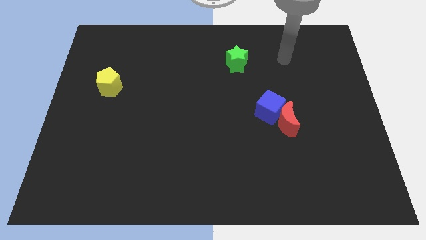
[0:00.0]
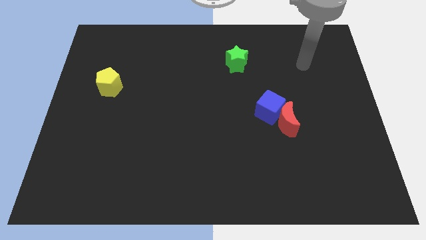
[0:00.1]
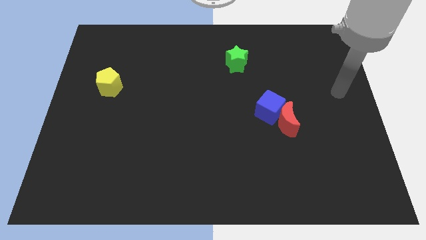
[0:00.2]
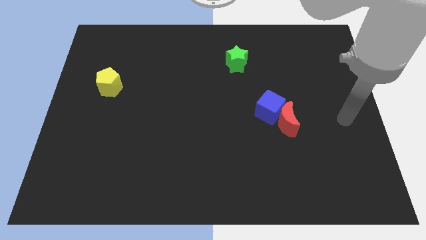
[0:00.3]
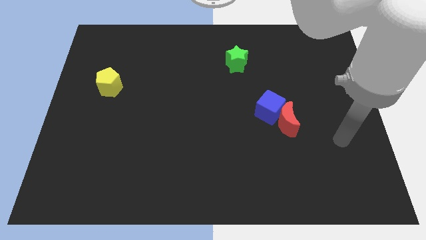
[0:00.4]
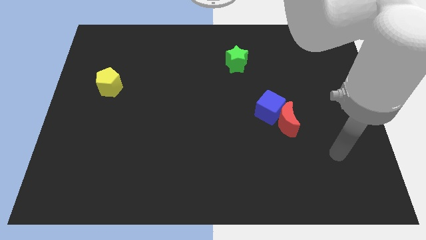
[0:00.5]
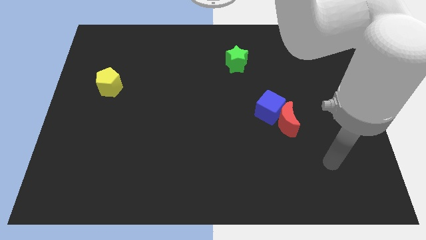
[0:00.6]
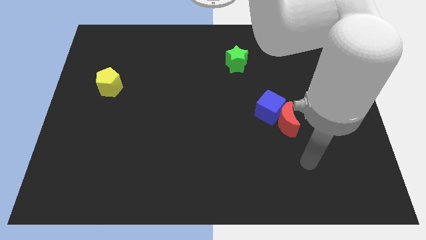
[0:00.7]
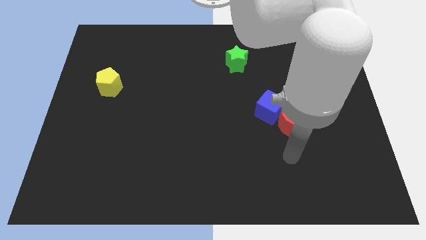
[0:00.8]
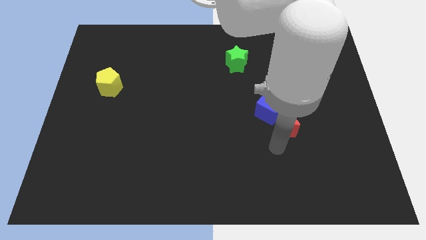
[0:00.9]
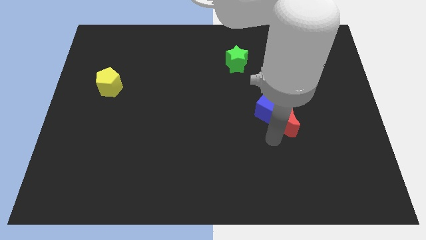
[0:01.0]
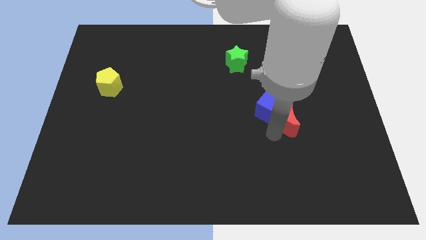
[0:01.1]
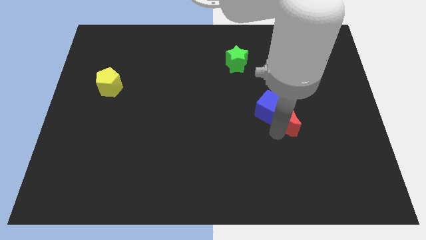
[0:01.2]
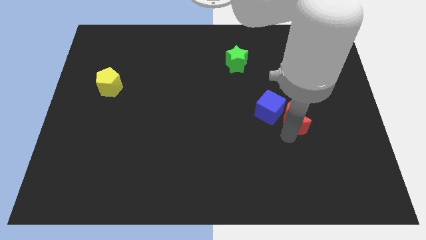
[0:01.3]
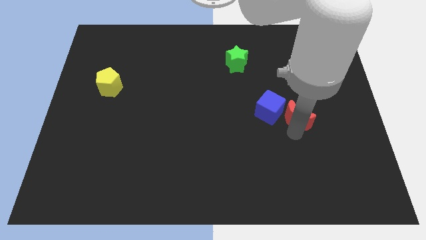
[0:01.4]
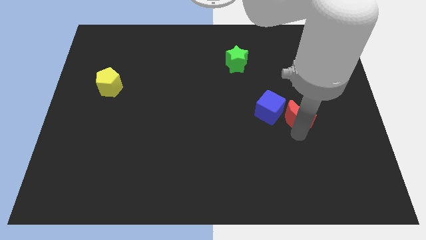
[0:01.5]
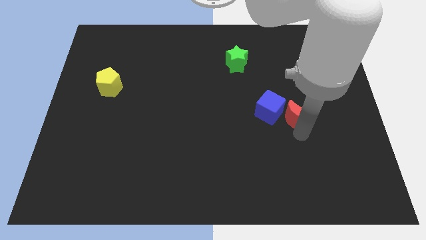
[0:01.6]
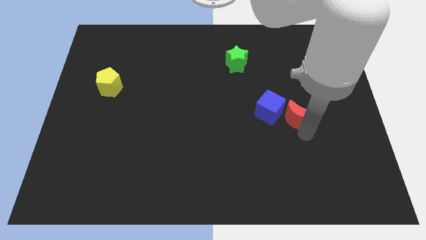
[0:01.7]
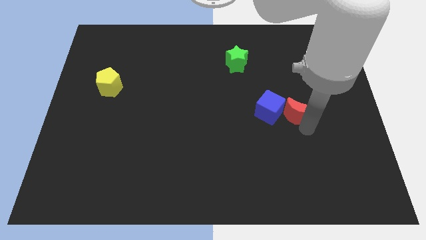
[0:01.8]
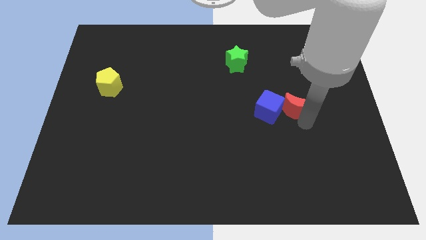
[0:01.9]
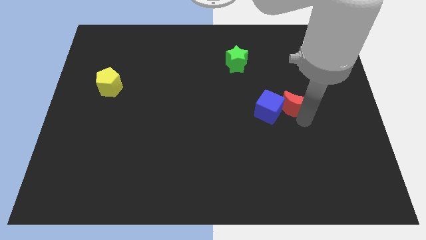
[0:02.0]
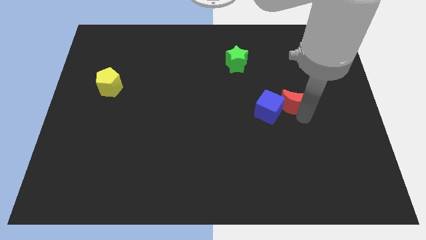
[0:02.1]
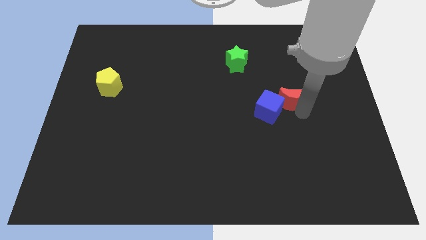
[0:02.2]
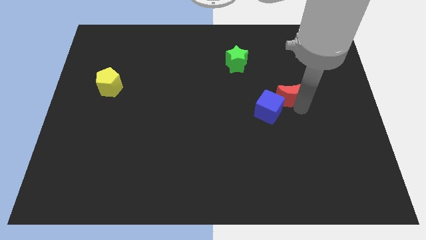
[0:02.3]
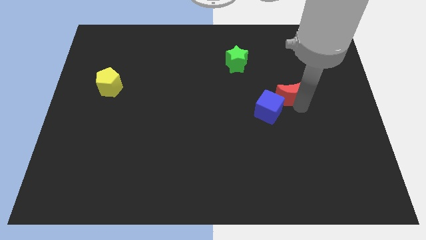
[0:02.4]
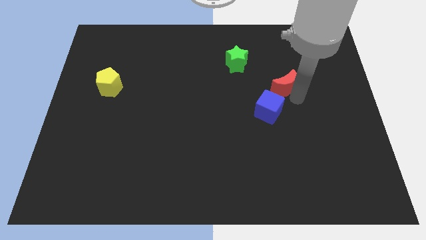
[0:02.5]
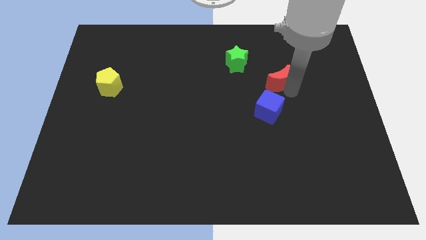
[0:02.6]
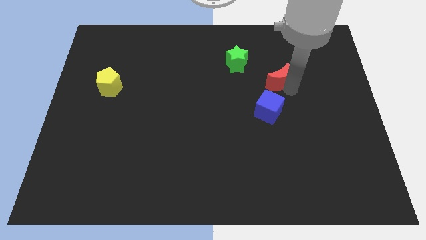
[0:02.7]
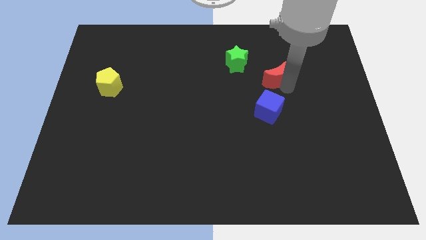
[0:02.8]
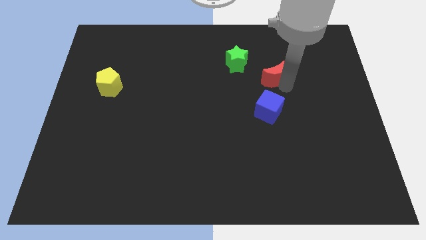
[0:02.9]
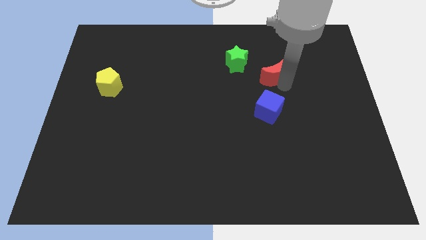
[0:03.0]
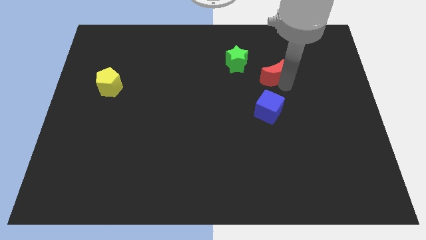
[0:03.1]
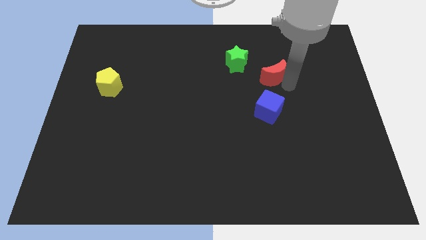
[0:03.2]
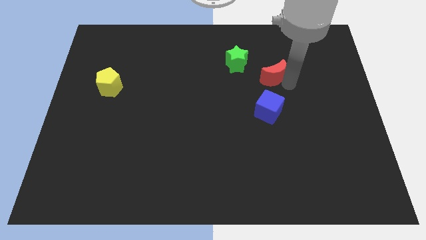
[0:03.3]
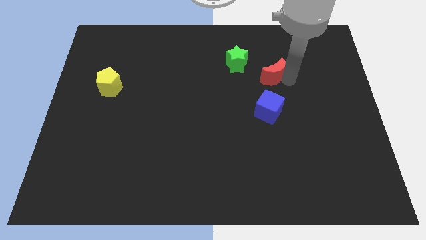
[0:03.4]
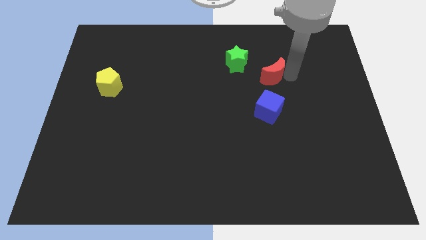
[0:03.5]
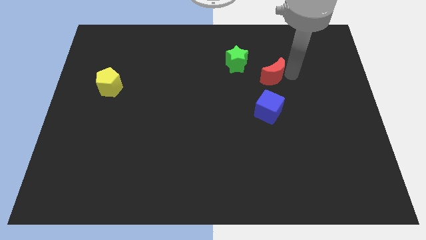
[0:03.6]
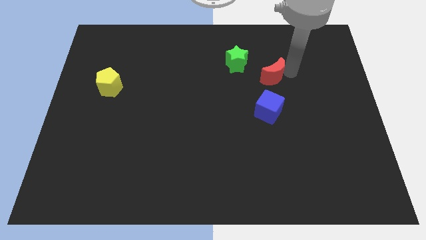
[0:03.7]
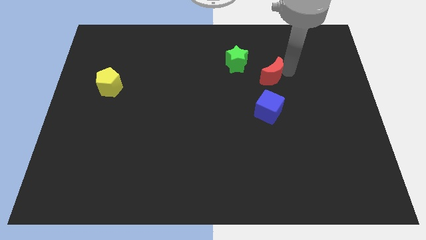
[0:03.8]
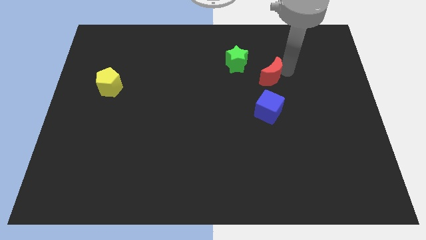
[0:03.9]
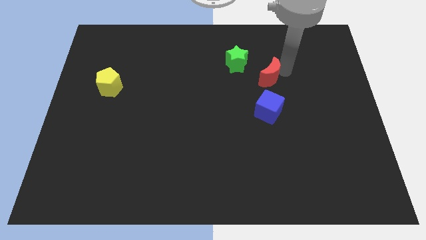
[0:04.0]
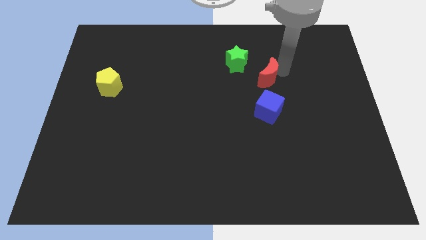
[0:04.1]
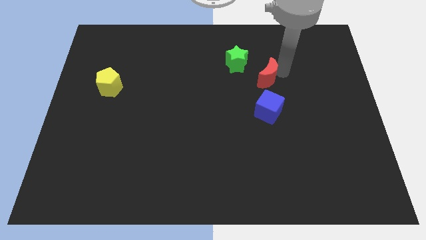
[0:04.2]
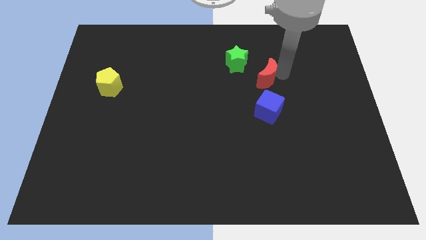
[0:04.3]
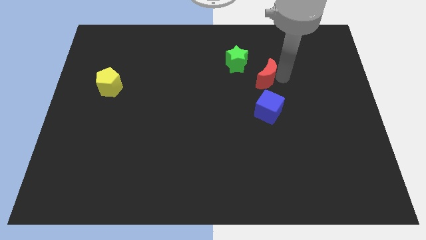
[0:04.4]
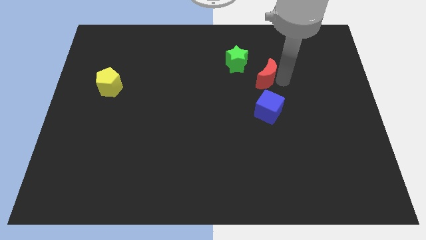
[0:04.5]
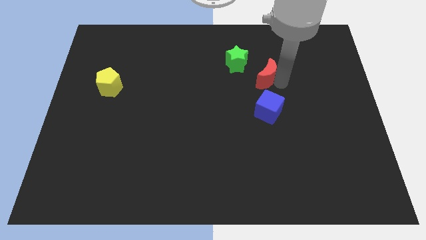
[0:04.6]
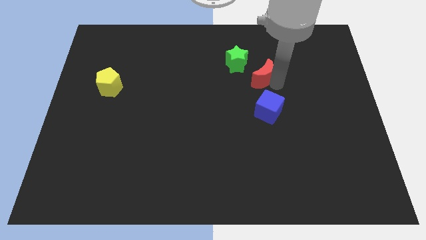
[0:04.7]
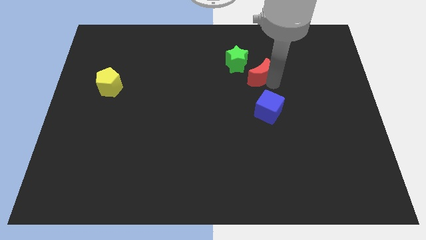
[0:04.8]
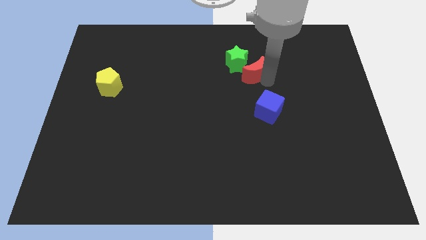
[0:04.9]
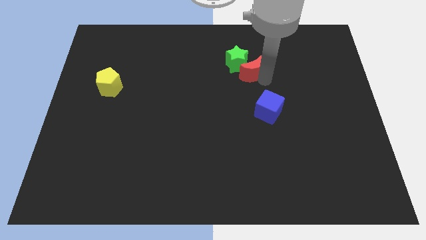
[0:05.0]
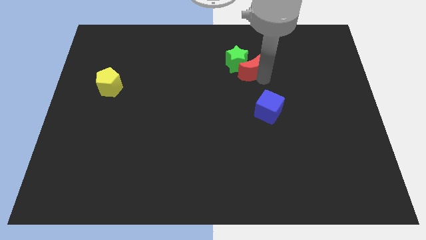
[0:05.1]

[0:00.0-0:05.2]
slide the red block close to the green star

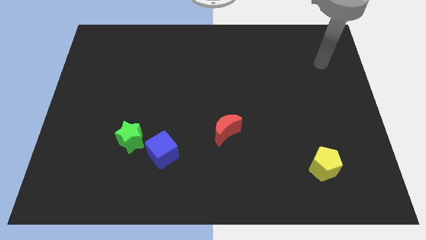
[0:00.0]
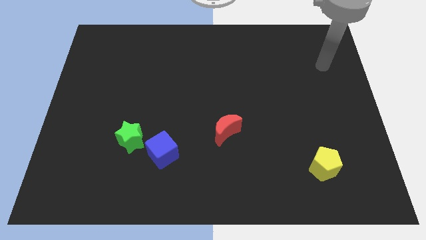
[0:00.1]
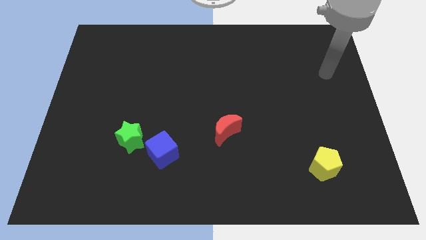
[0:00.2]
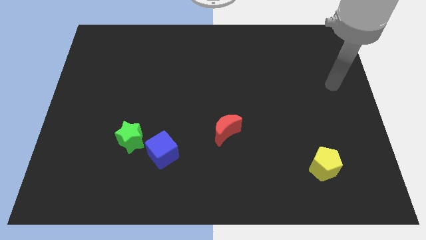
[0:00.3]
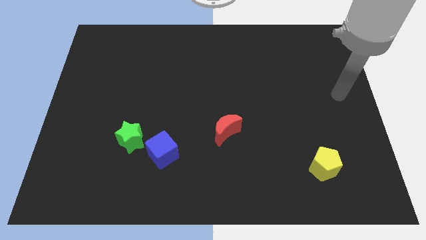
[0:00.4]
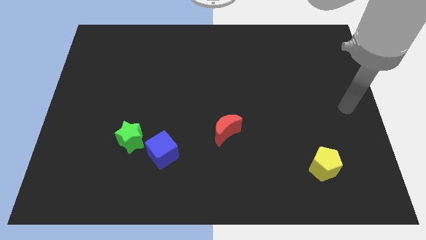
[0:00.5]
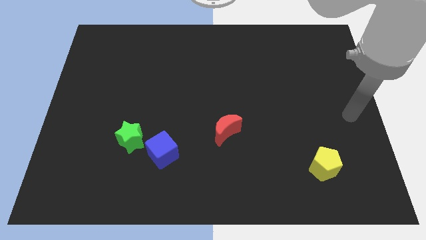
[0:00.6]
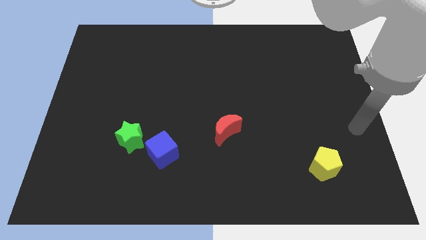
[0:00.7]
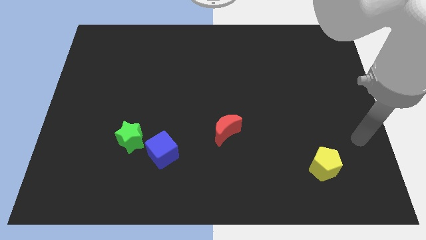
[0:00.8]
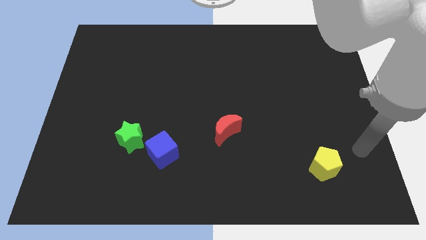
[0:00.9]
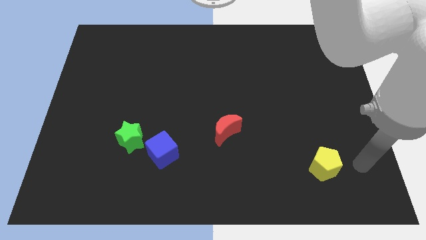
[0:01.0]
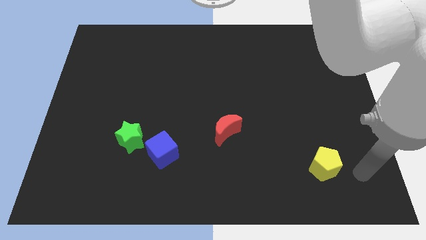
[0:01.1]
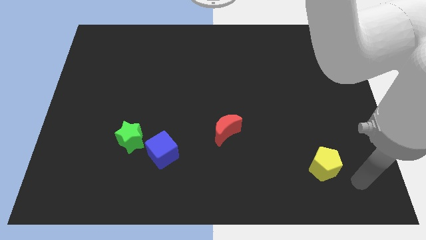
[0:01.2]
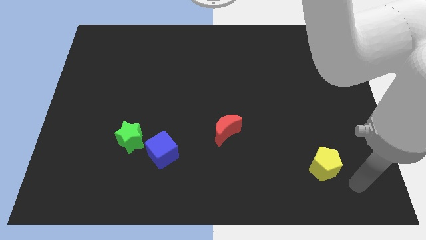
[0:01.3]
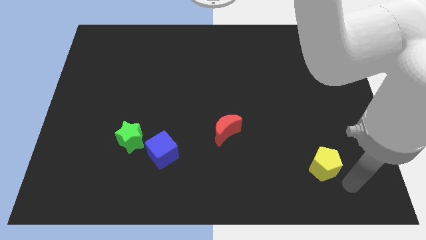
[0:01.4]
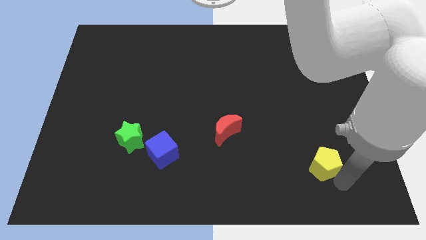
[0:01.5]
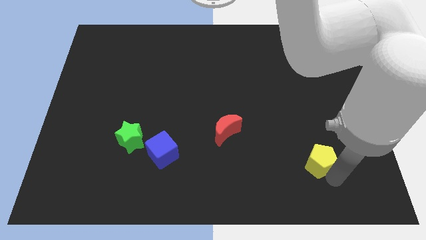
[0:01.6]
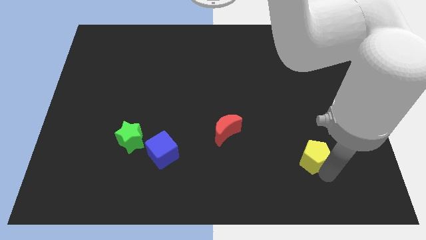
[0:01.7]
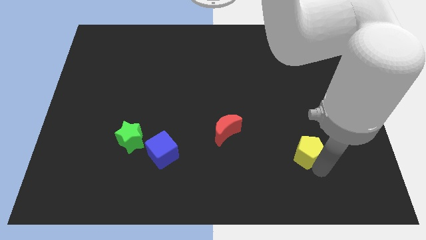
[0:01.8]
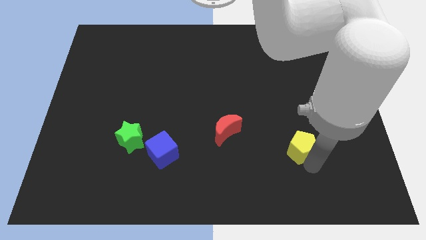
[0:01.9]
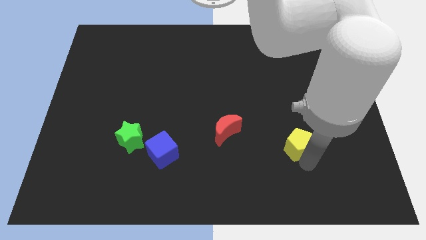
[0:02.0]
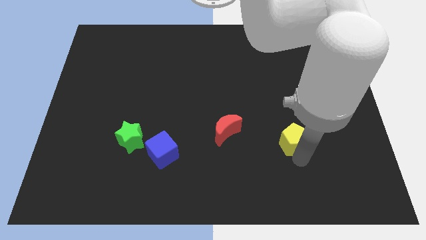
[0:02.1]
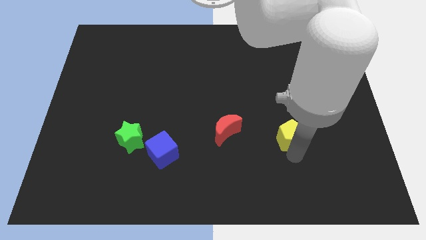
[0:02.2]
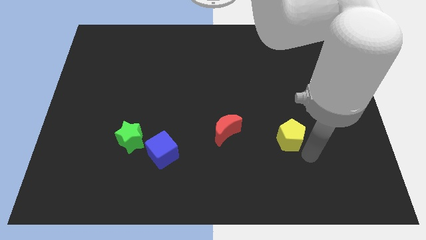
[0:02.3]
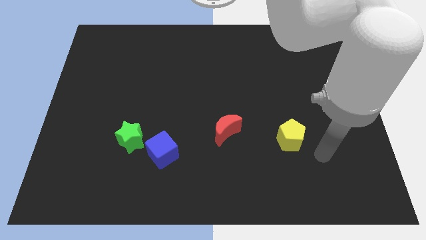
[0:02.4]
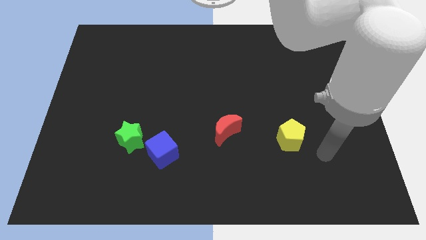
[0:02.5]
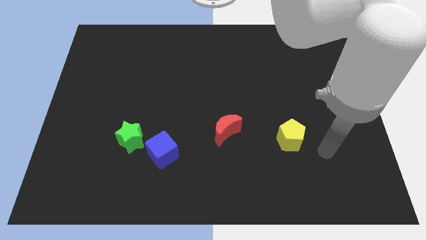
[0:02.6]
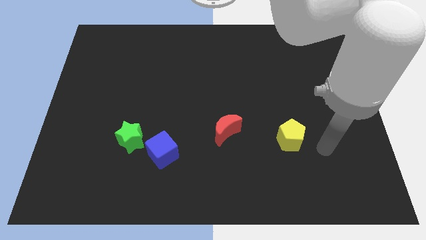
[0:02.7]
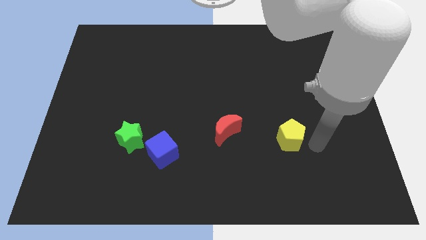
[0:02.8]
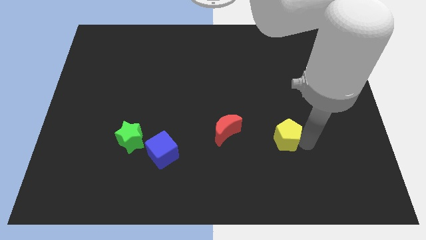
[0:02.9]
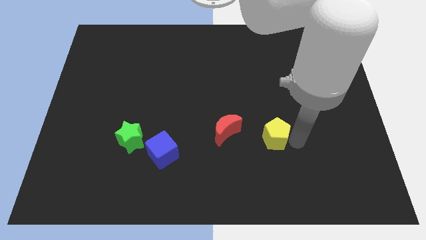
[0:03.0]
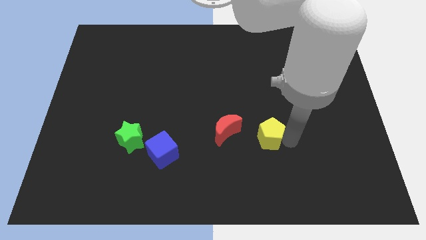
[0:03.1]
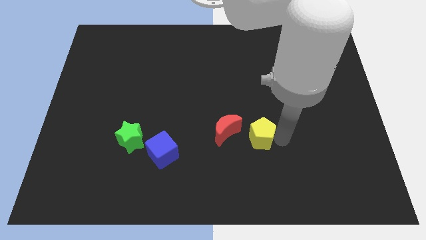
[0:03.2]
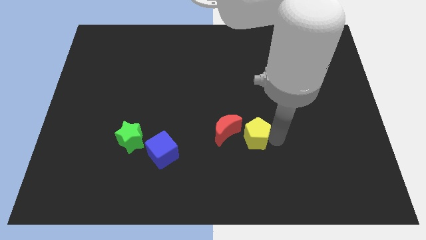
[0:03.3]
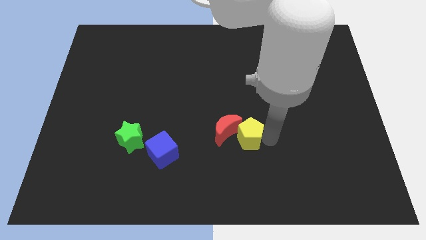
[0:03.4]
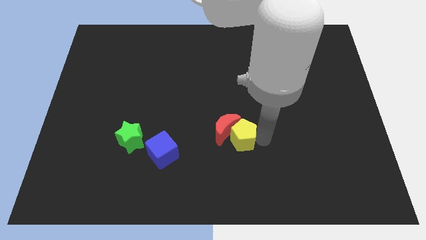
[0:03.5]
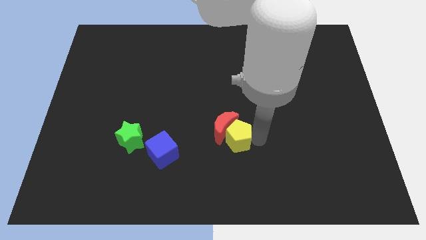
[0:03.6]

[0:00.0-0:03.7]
put the pentagon towards the red block
